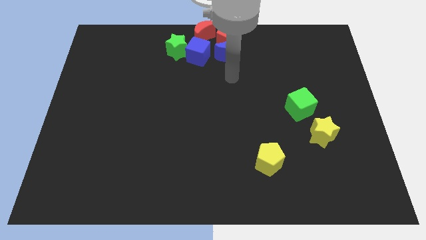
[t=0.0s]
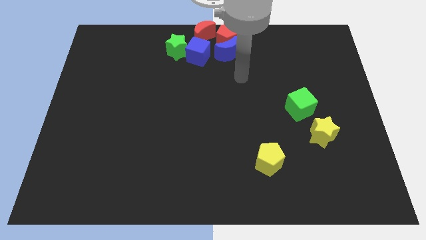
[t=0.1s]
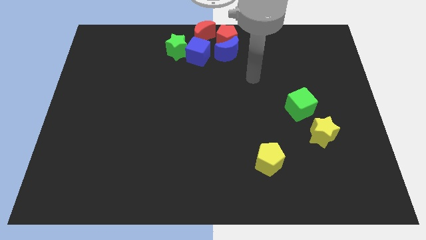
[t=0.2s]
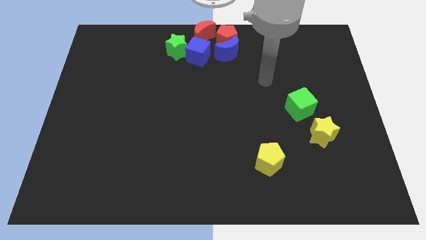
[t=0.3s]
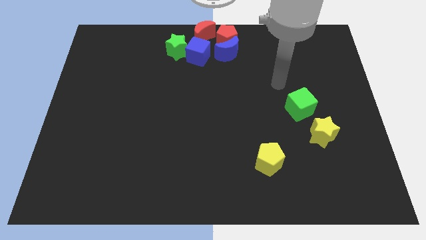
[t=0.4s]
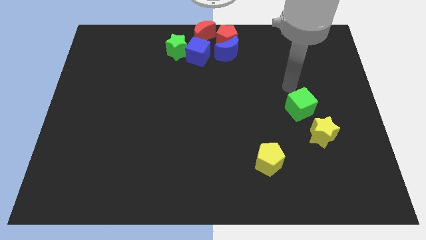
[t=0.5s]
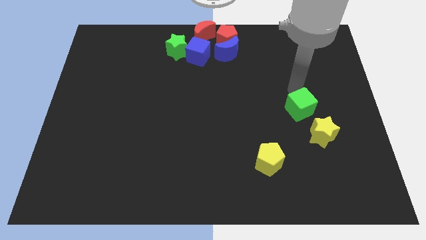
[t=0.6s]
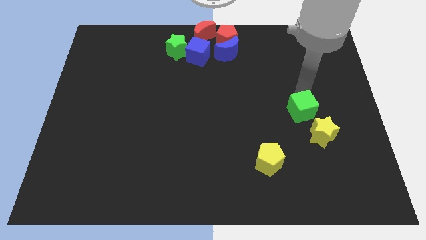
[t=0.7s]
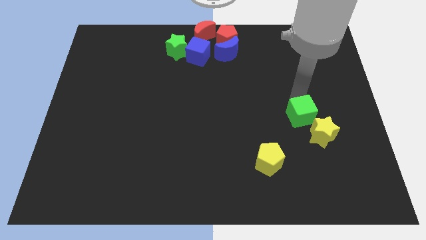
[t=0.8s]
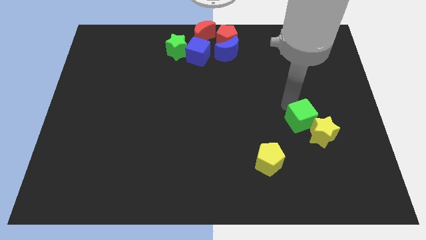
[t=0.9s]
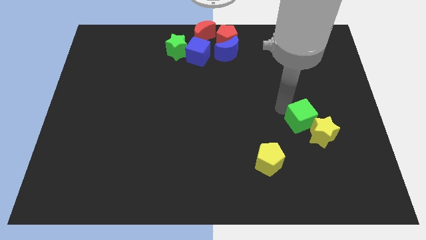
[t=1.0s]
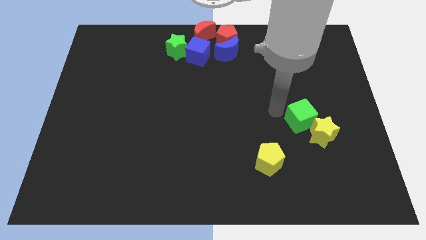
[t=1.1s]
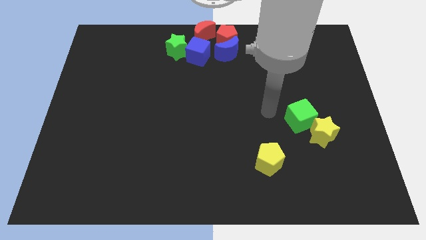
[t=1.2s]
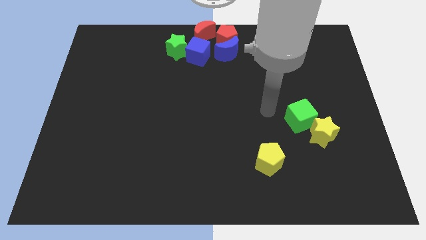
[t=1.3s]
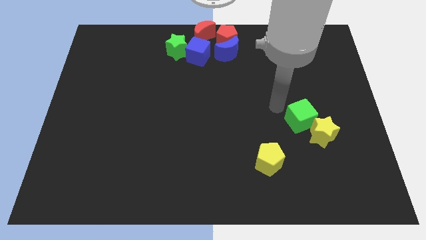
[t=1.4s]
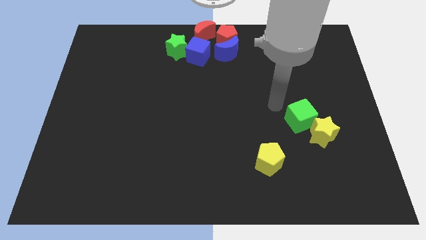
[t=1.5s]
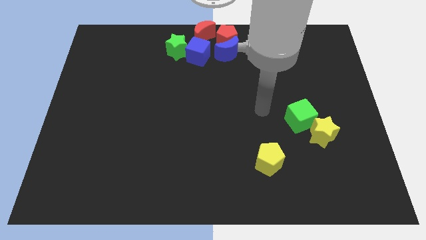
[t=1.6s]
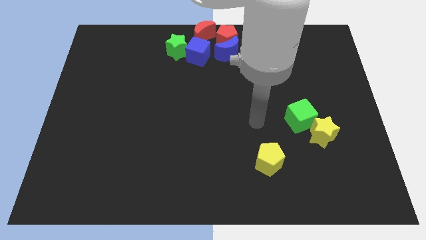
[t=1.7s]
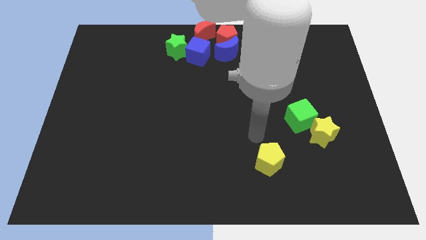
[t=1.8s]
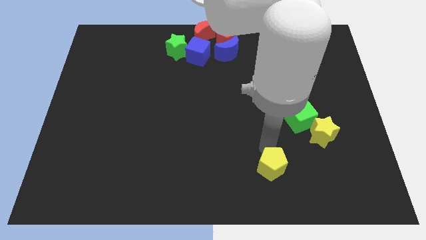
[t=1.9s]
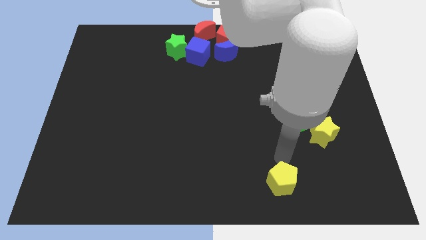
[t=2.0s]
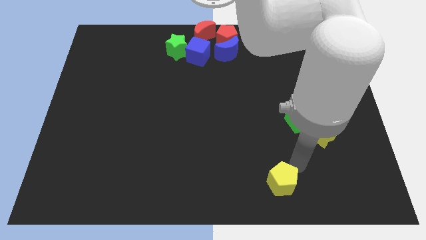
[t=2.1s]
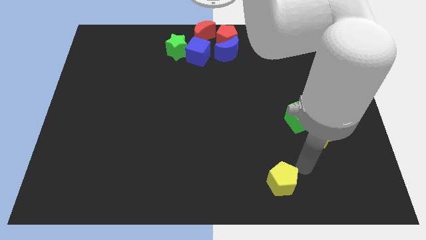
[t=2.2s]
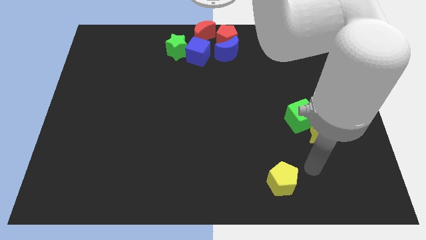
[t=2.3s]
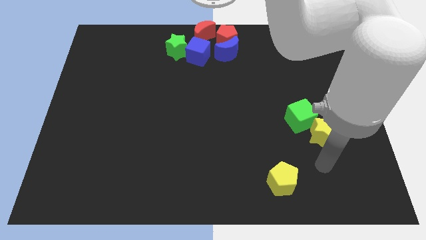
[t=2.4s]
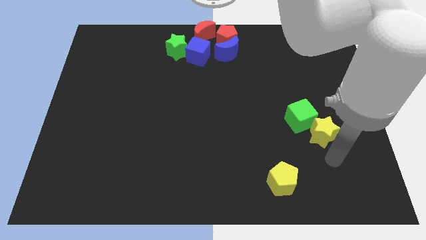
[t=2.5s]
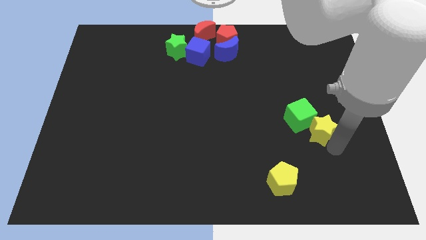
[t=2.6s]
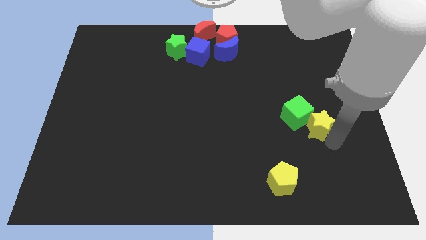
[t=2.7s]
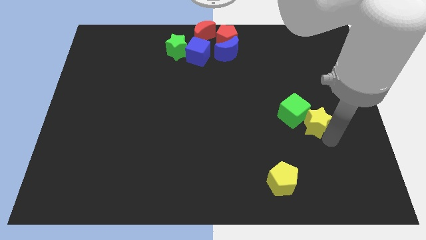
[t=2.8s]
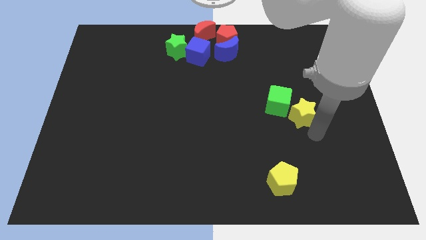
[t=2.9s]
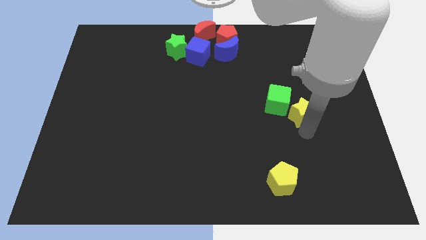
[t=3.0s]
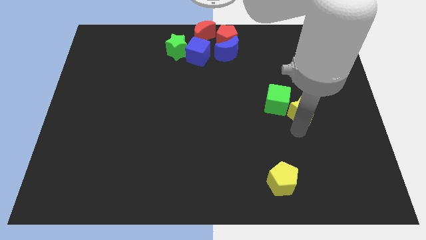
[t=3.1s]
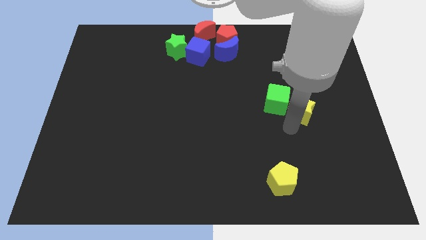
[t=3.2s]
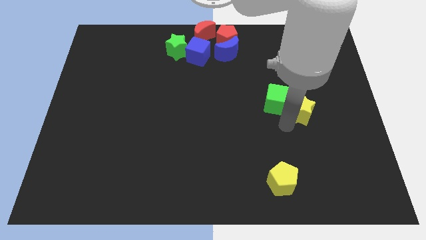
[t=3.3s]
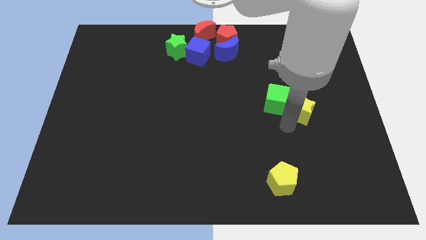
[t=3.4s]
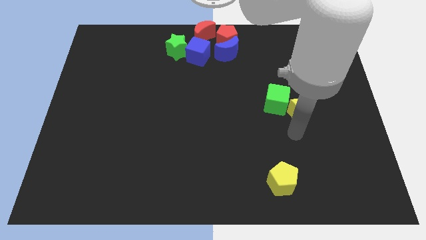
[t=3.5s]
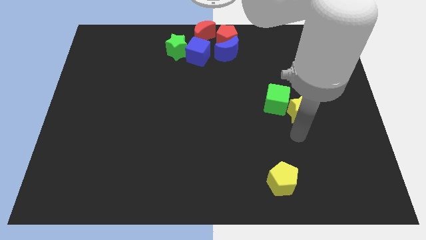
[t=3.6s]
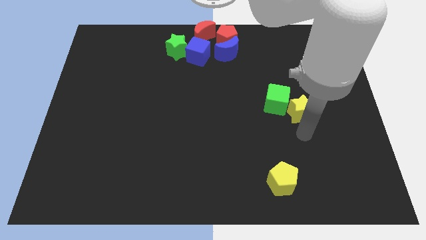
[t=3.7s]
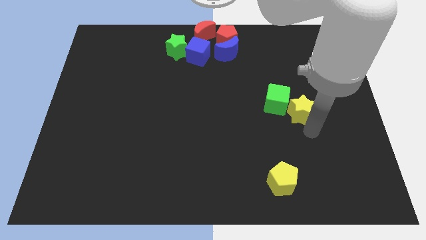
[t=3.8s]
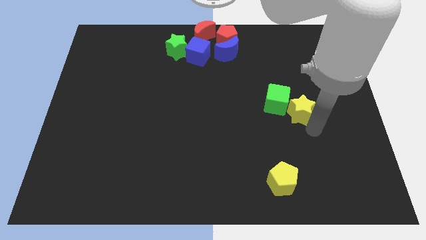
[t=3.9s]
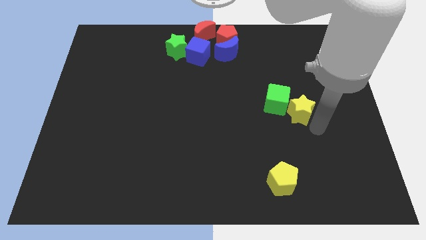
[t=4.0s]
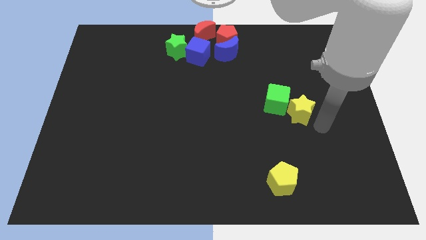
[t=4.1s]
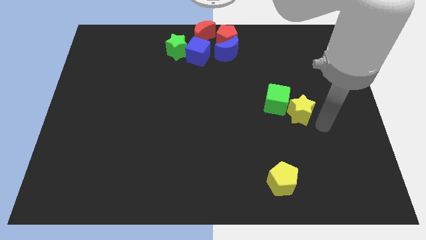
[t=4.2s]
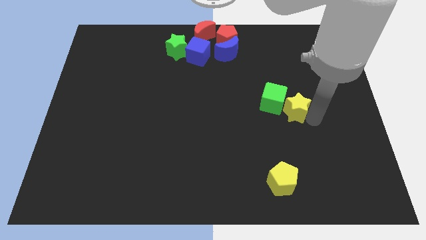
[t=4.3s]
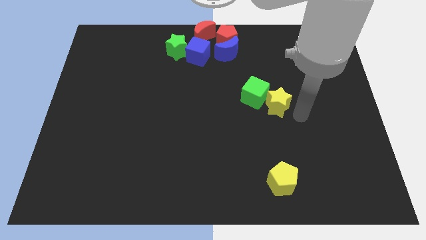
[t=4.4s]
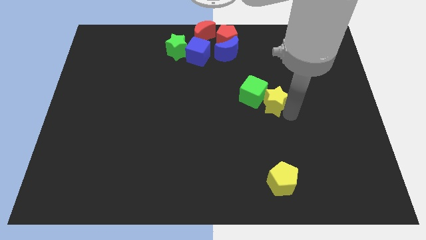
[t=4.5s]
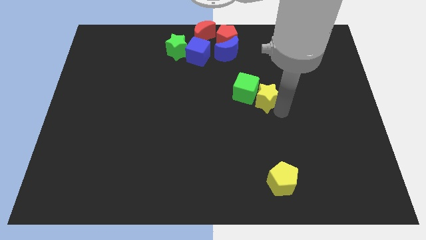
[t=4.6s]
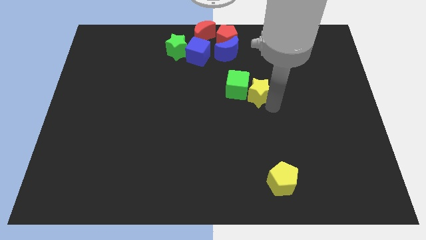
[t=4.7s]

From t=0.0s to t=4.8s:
move the yellow star and the green cube towards the center of the board

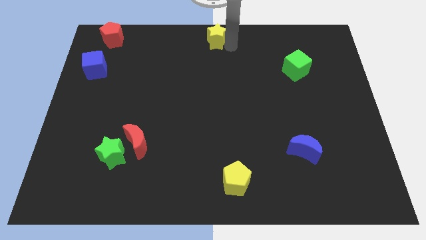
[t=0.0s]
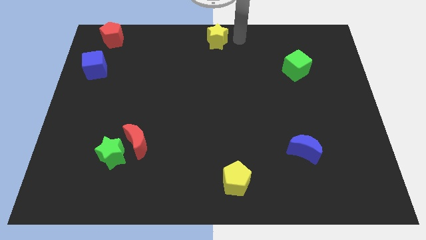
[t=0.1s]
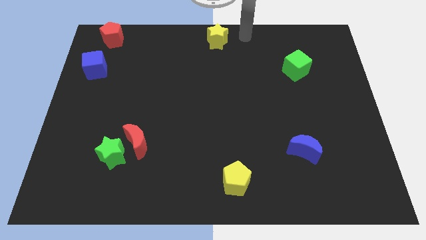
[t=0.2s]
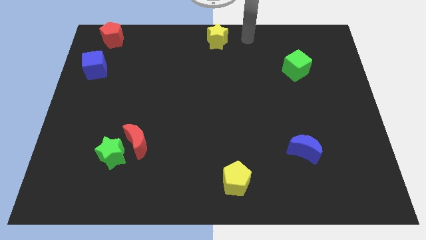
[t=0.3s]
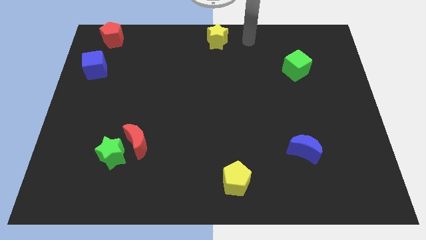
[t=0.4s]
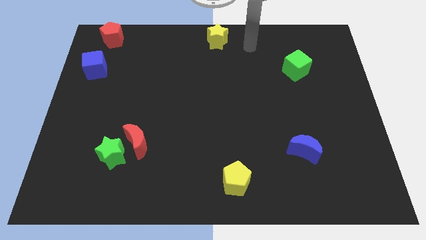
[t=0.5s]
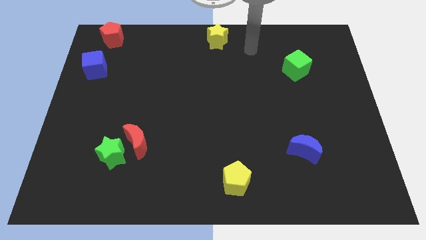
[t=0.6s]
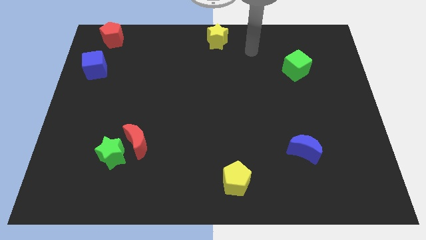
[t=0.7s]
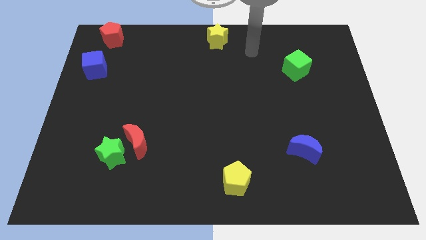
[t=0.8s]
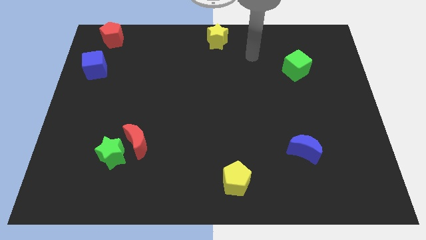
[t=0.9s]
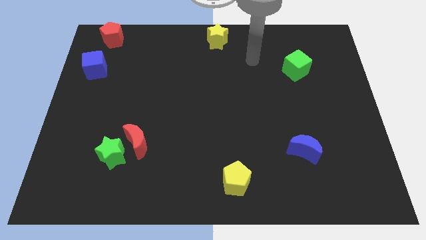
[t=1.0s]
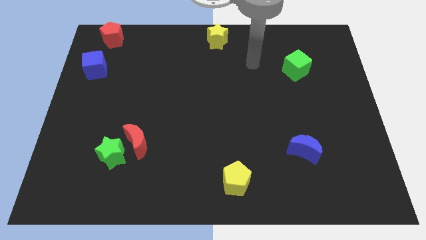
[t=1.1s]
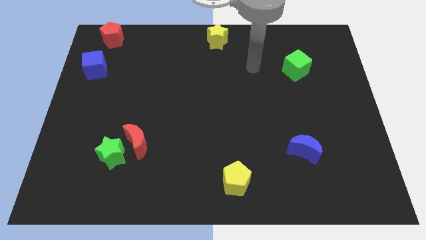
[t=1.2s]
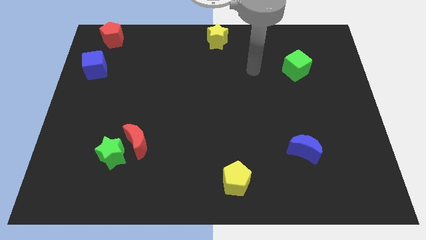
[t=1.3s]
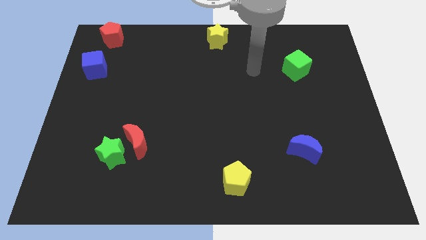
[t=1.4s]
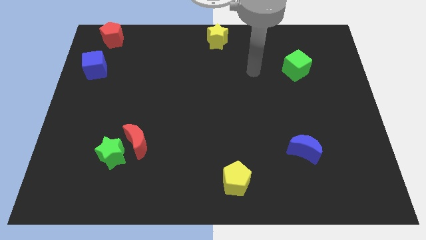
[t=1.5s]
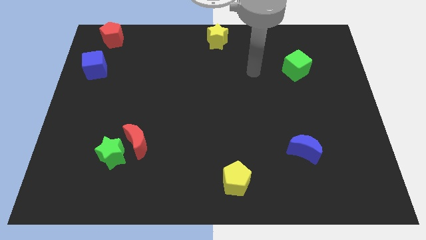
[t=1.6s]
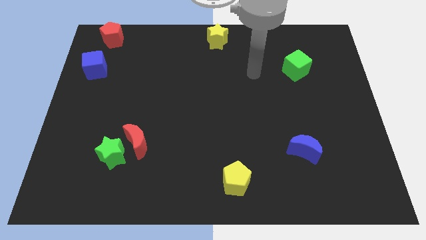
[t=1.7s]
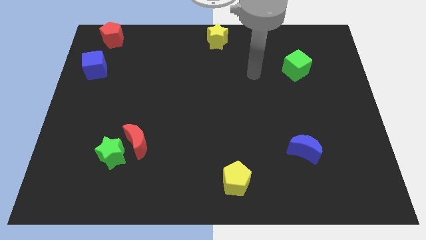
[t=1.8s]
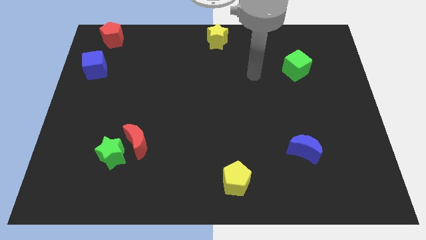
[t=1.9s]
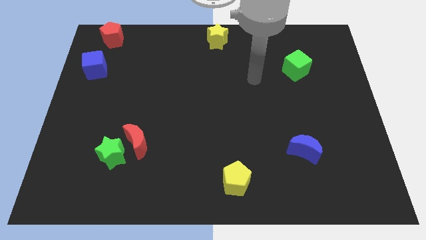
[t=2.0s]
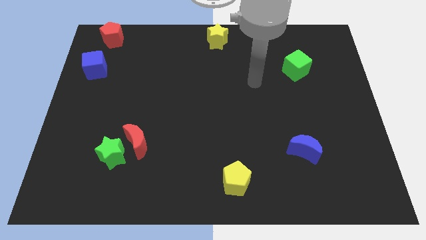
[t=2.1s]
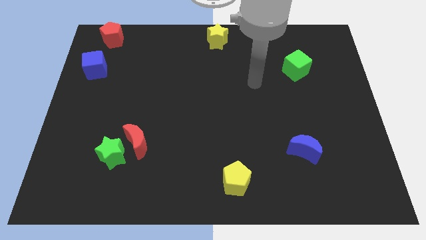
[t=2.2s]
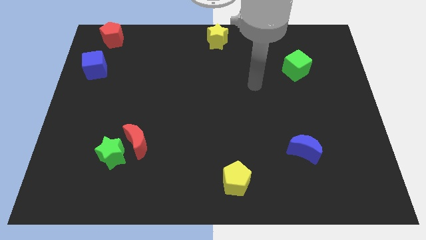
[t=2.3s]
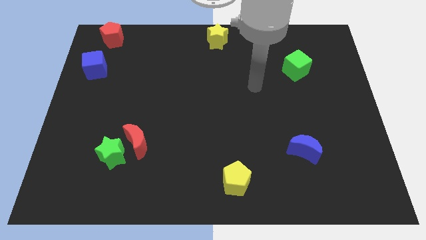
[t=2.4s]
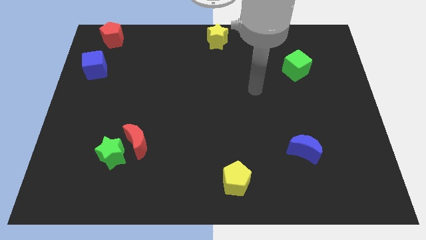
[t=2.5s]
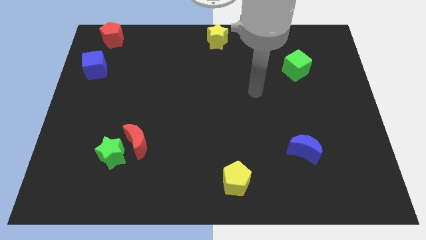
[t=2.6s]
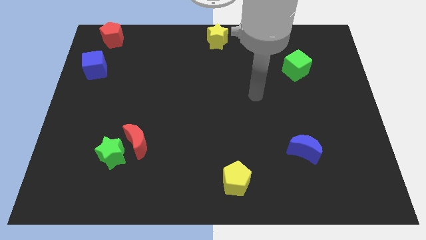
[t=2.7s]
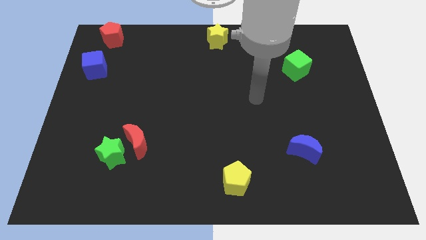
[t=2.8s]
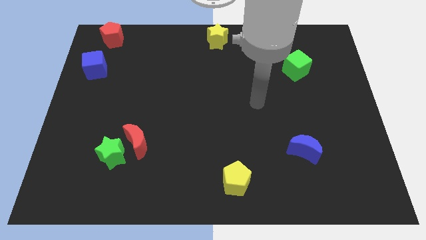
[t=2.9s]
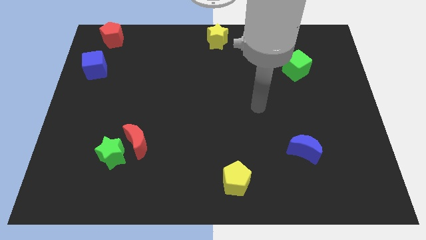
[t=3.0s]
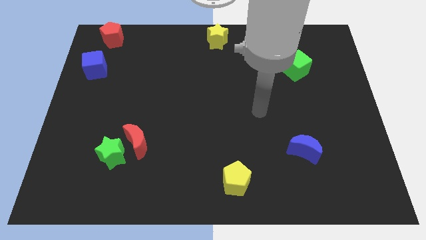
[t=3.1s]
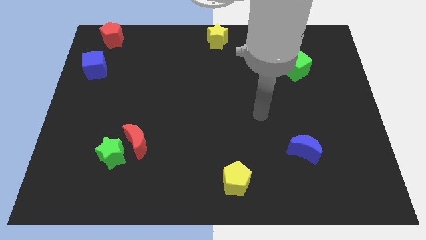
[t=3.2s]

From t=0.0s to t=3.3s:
move your arm away from yellow star

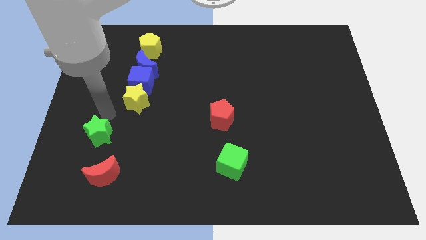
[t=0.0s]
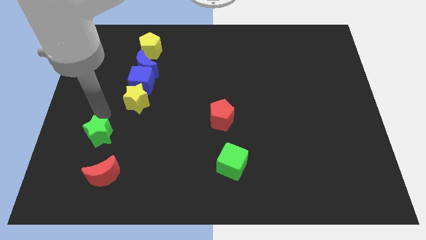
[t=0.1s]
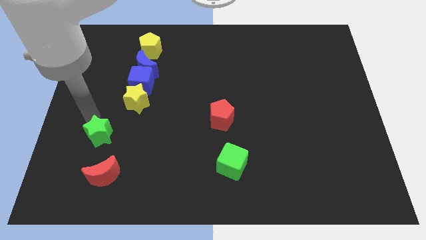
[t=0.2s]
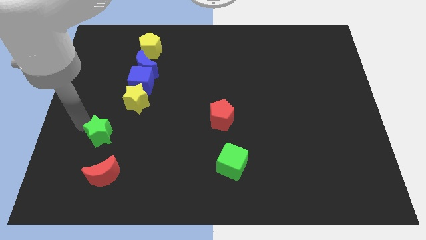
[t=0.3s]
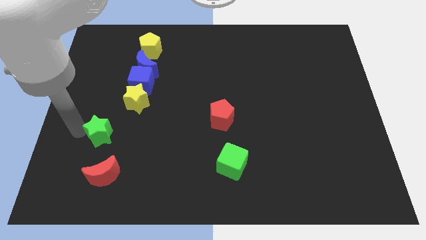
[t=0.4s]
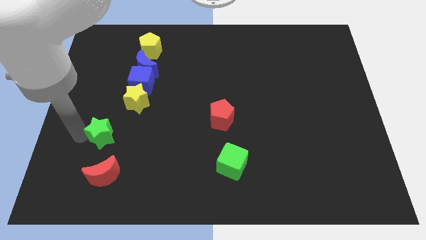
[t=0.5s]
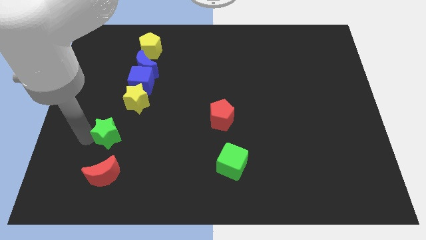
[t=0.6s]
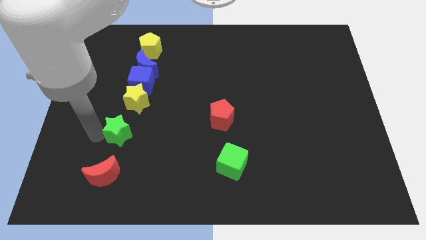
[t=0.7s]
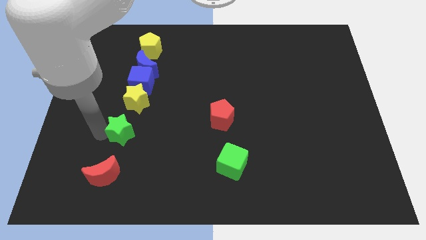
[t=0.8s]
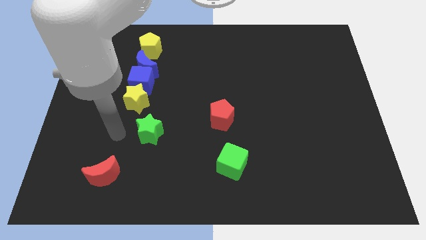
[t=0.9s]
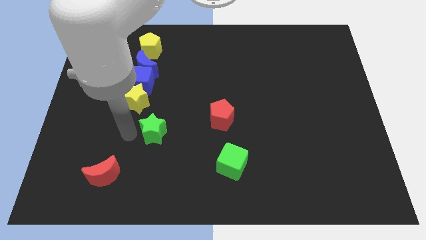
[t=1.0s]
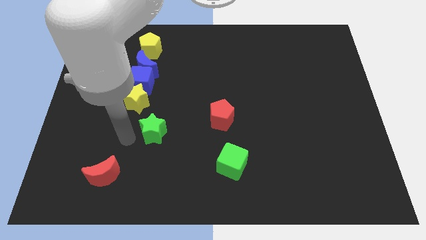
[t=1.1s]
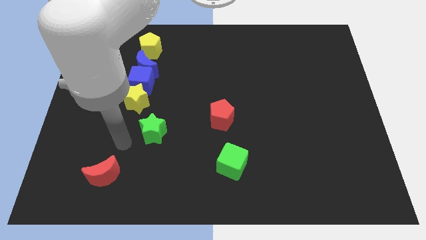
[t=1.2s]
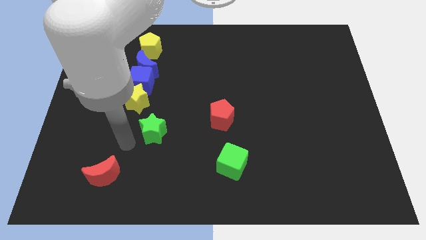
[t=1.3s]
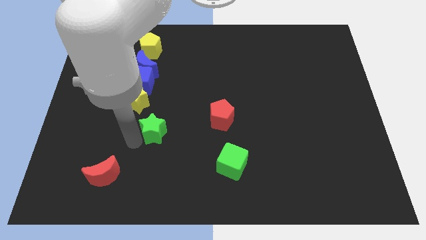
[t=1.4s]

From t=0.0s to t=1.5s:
push the green star towards the red pentagon
